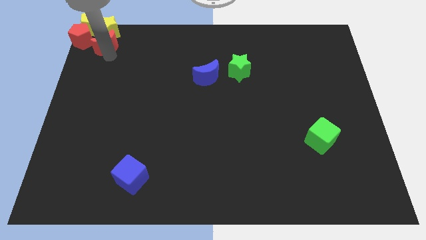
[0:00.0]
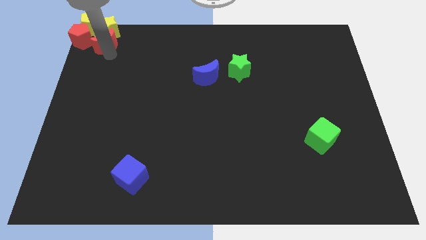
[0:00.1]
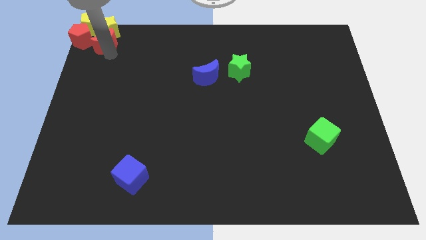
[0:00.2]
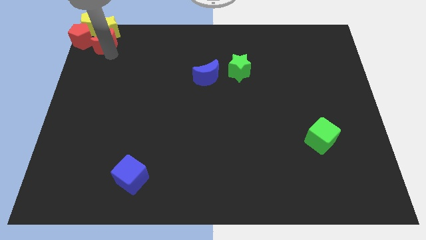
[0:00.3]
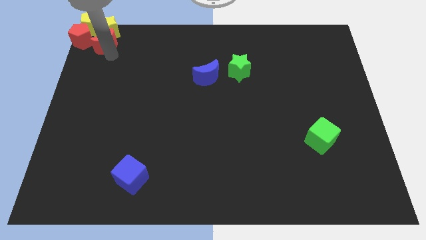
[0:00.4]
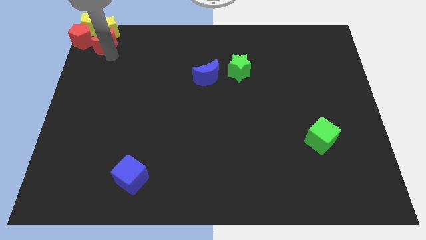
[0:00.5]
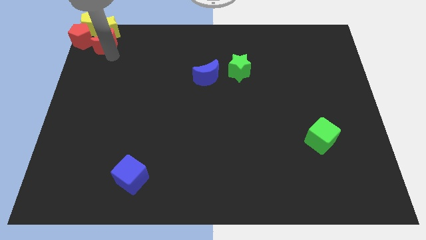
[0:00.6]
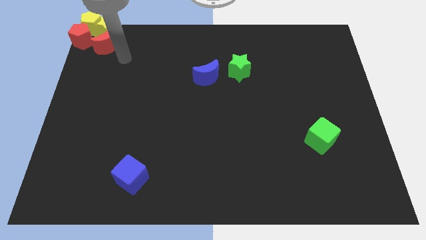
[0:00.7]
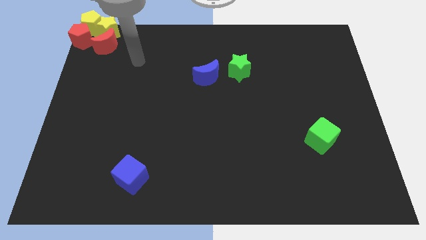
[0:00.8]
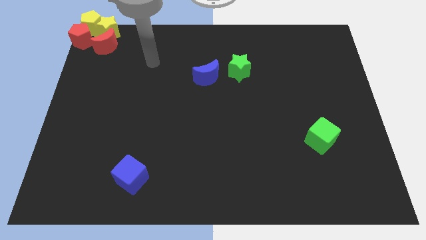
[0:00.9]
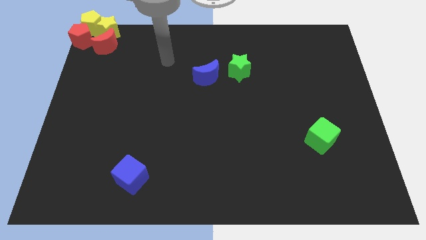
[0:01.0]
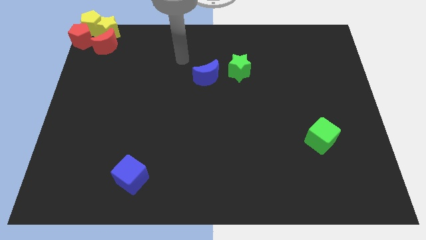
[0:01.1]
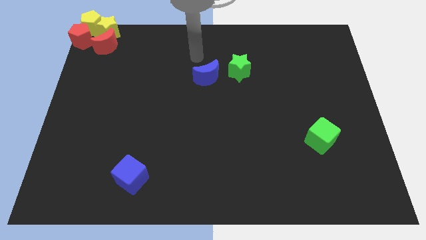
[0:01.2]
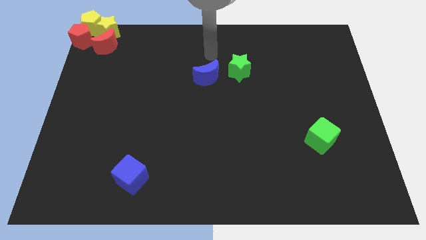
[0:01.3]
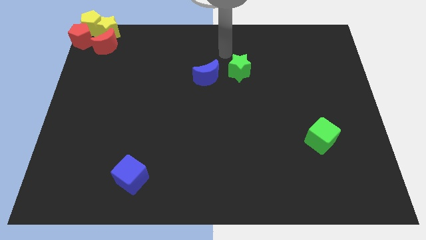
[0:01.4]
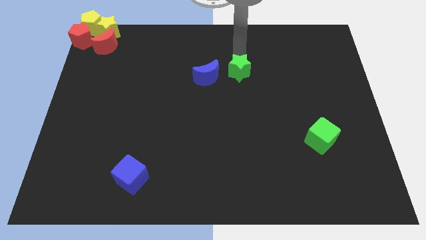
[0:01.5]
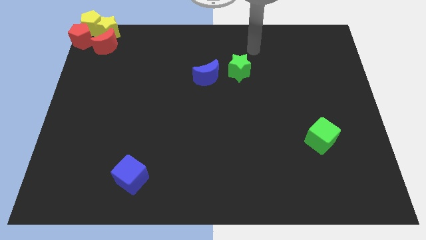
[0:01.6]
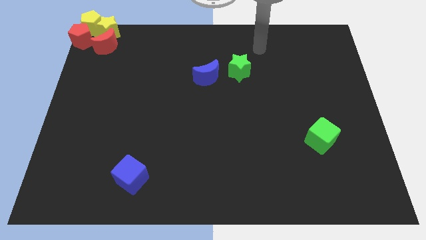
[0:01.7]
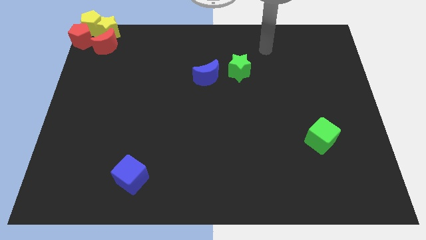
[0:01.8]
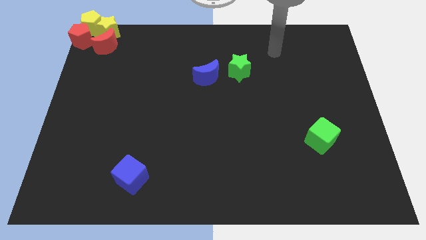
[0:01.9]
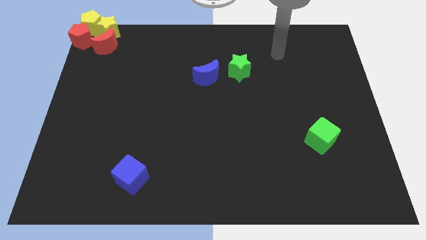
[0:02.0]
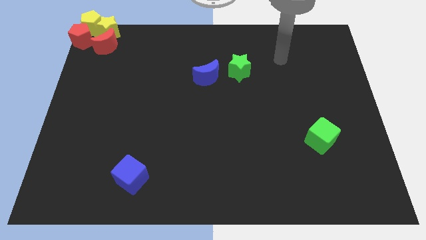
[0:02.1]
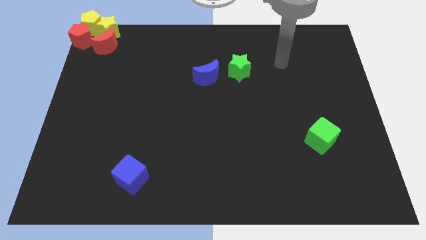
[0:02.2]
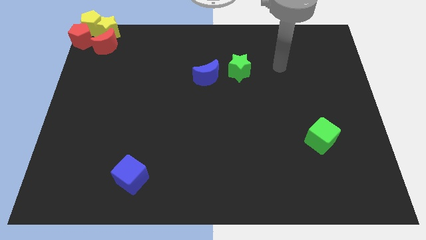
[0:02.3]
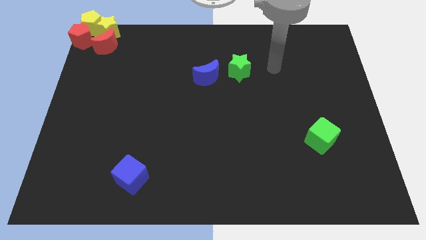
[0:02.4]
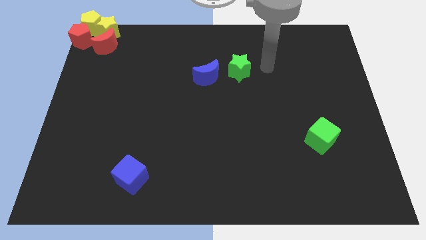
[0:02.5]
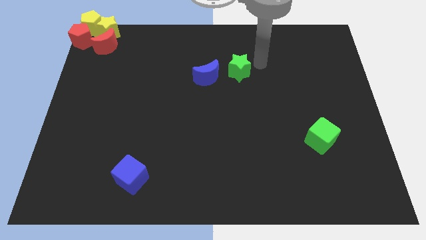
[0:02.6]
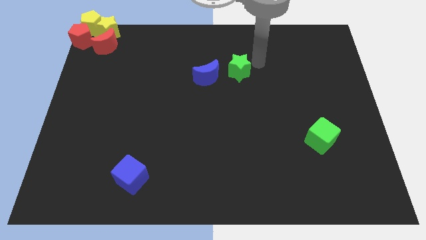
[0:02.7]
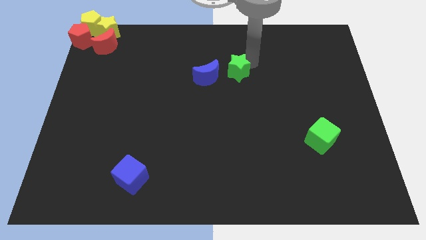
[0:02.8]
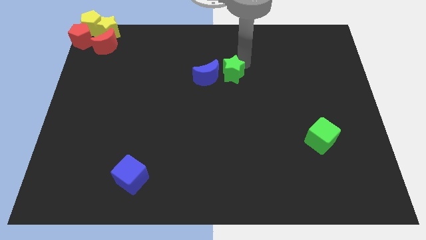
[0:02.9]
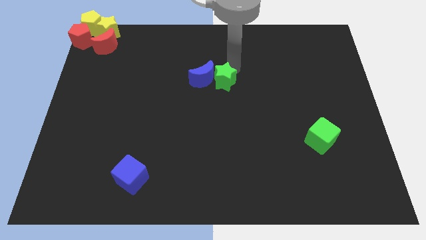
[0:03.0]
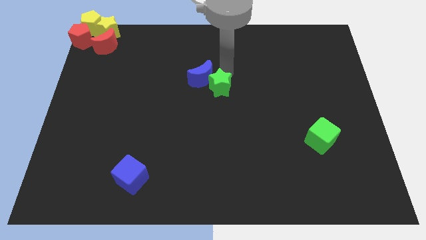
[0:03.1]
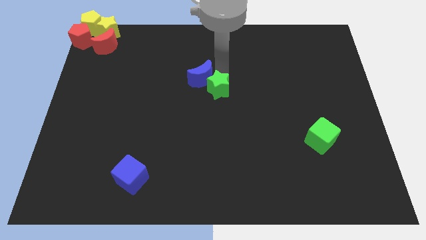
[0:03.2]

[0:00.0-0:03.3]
push green star slightly downwards

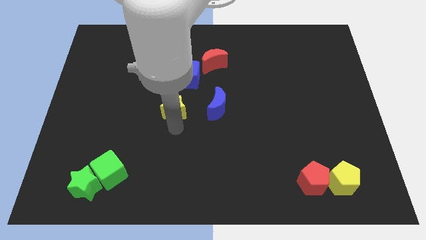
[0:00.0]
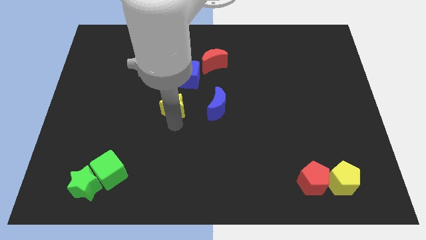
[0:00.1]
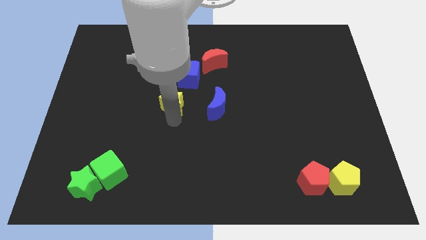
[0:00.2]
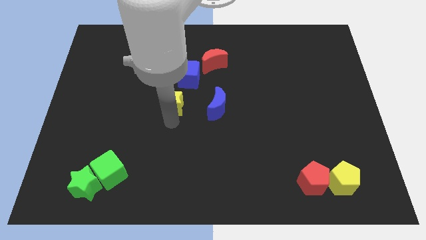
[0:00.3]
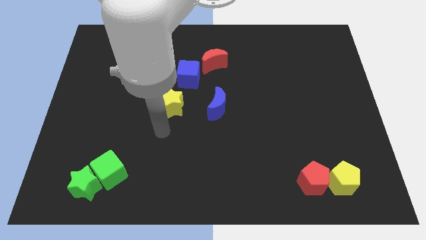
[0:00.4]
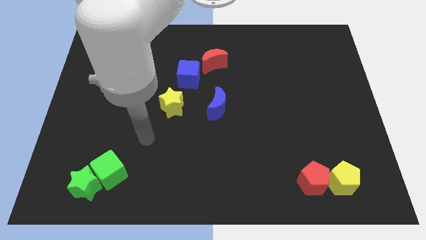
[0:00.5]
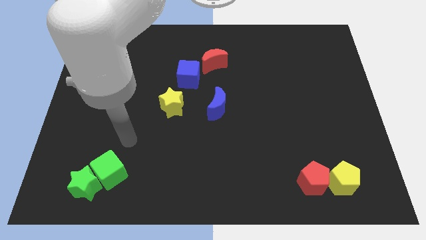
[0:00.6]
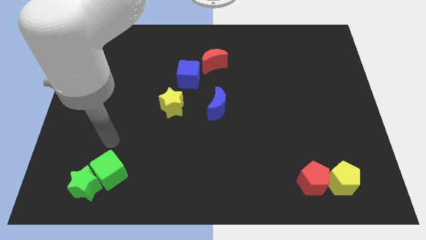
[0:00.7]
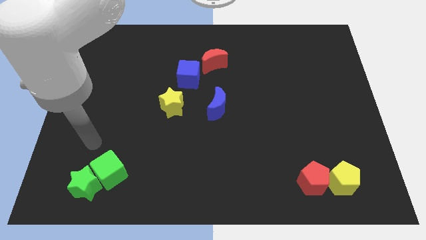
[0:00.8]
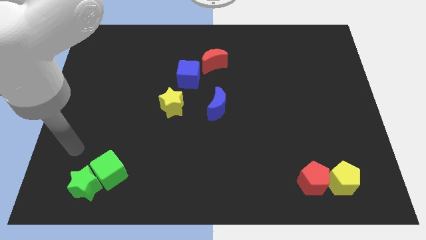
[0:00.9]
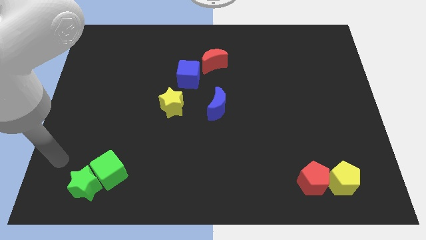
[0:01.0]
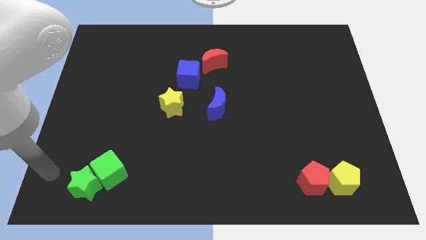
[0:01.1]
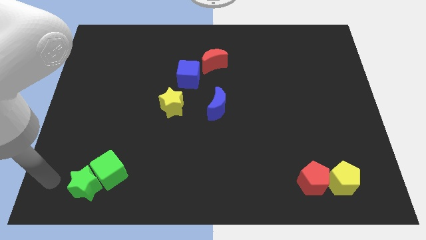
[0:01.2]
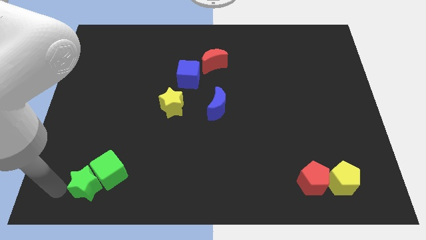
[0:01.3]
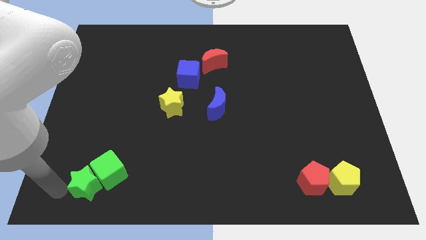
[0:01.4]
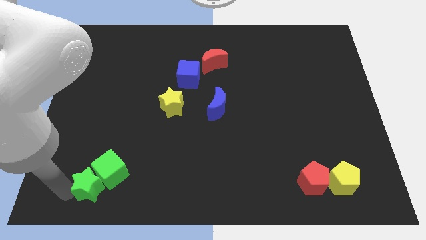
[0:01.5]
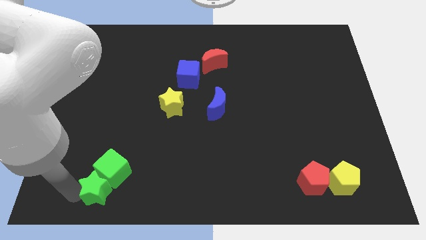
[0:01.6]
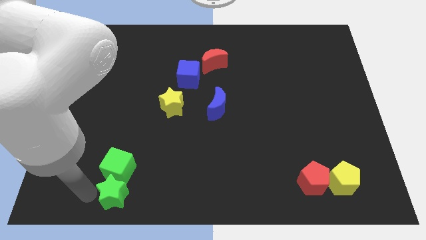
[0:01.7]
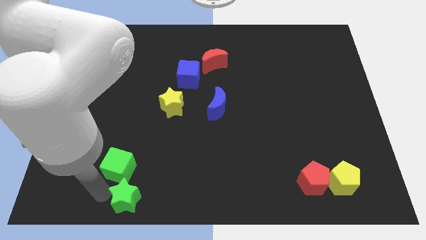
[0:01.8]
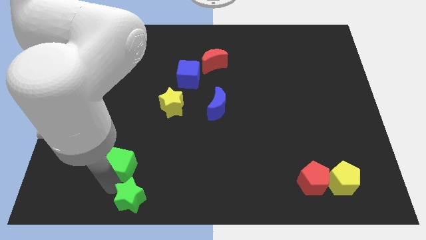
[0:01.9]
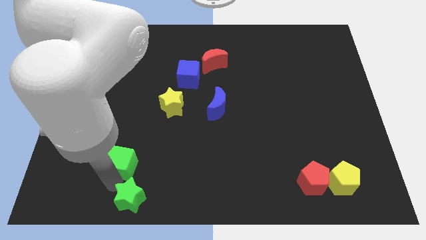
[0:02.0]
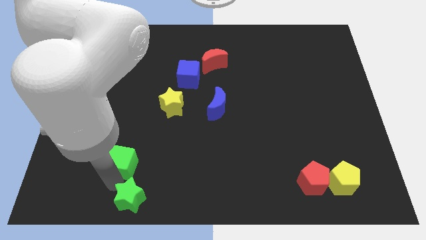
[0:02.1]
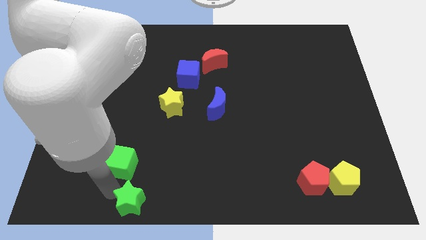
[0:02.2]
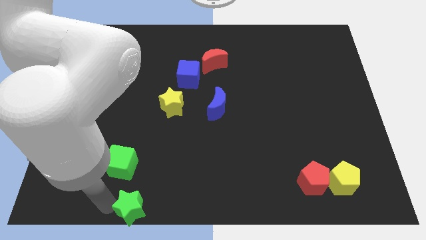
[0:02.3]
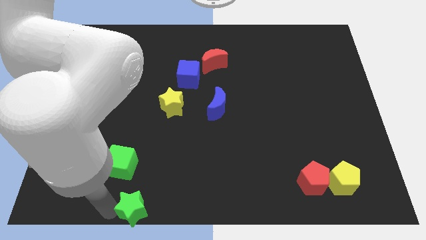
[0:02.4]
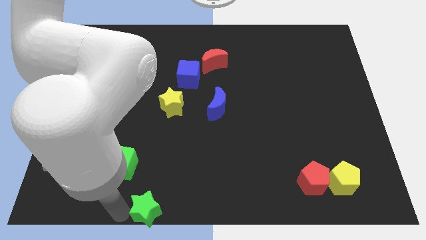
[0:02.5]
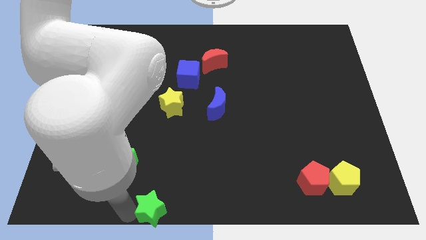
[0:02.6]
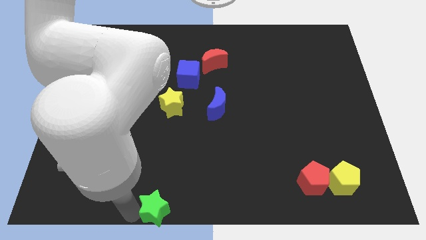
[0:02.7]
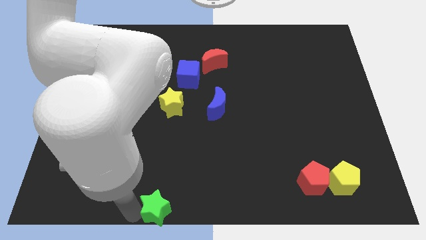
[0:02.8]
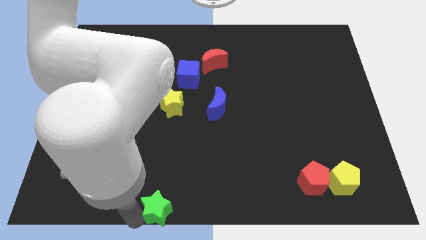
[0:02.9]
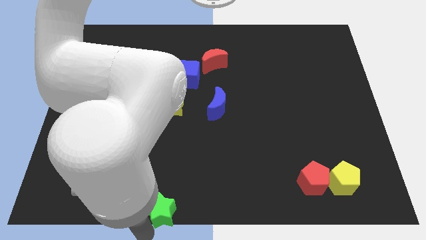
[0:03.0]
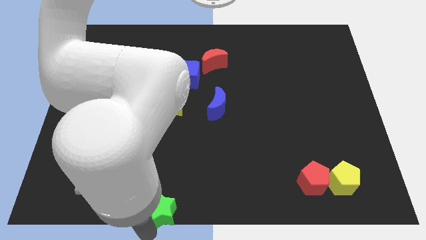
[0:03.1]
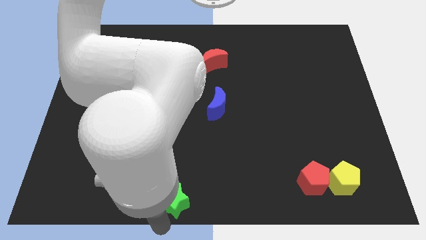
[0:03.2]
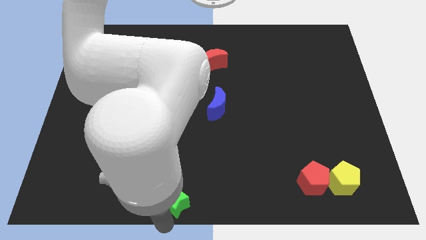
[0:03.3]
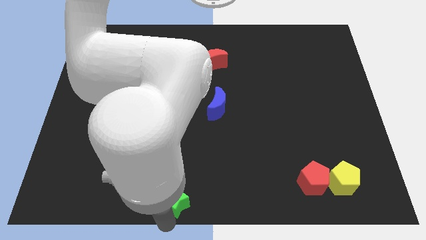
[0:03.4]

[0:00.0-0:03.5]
move the green star to the bottom center side of the board

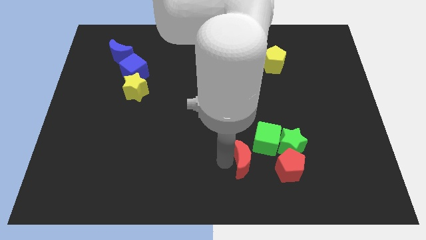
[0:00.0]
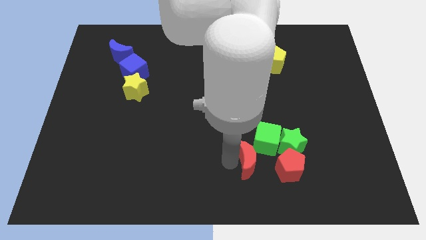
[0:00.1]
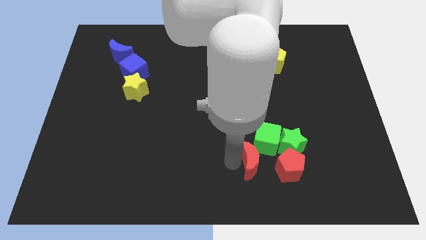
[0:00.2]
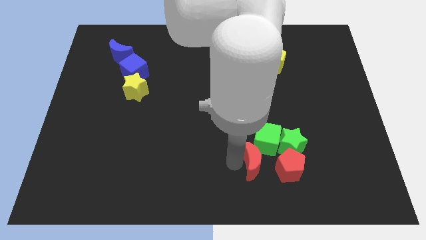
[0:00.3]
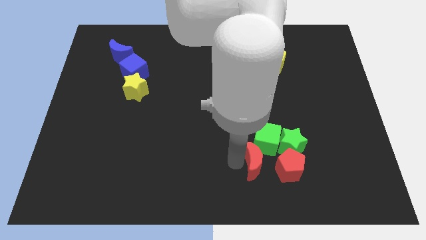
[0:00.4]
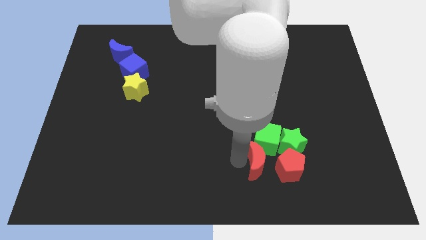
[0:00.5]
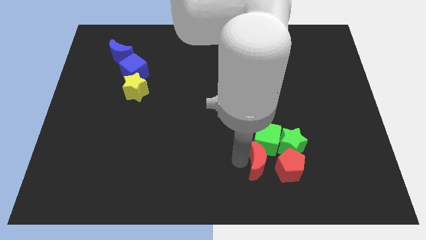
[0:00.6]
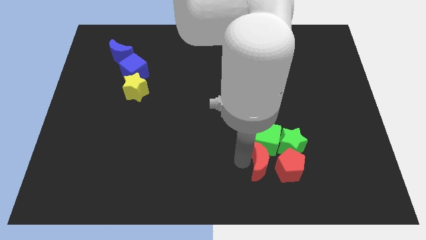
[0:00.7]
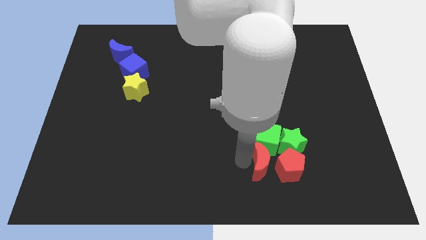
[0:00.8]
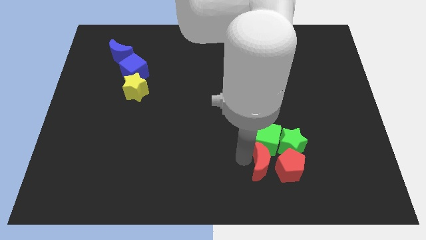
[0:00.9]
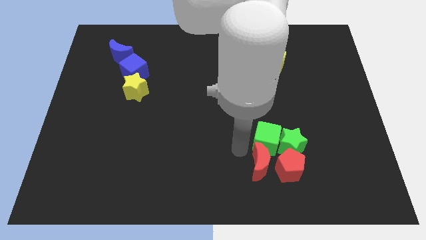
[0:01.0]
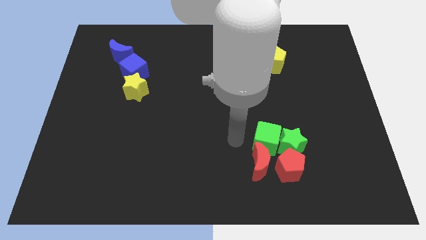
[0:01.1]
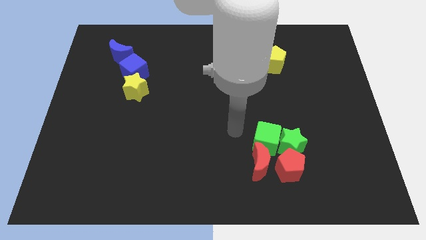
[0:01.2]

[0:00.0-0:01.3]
move red moon near the red pentagon

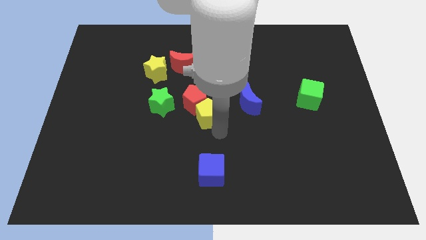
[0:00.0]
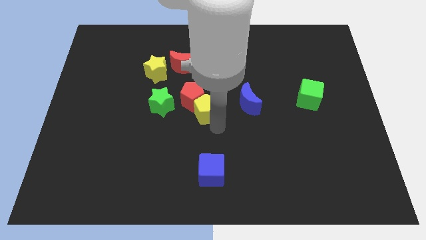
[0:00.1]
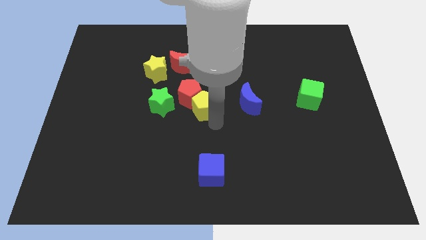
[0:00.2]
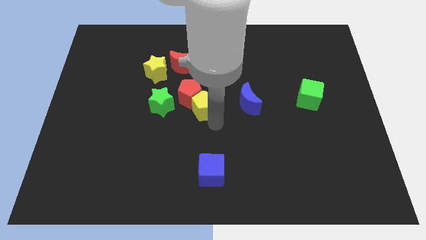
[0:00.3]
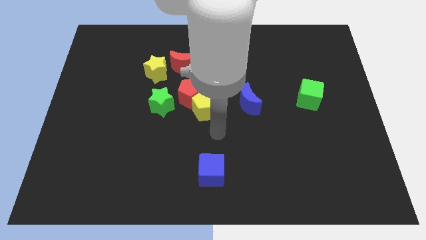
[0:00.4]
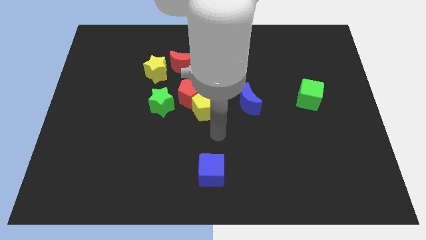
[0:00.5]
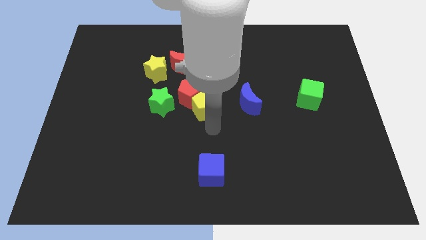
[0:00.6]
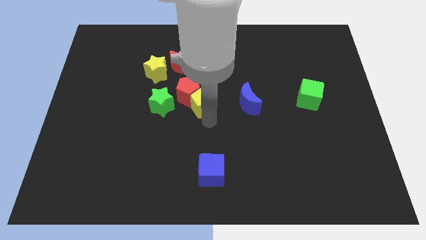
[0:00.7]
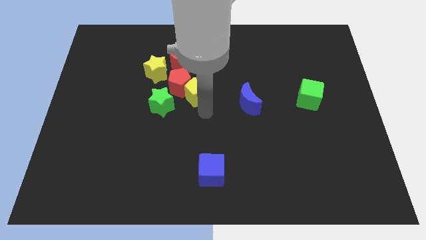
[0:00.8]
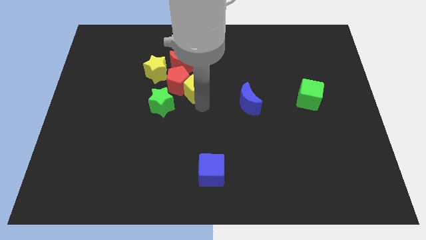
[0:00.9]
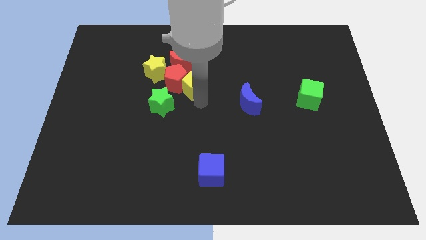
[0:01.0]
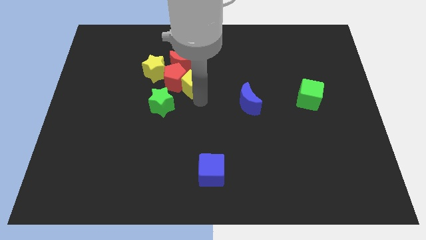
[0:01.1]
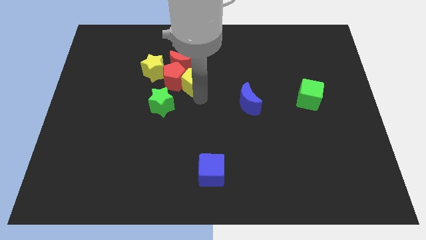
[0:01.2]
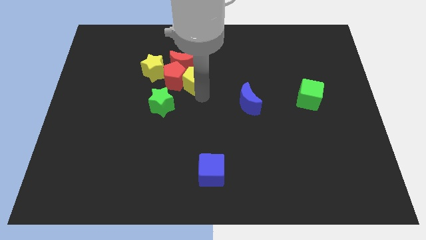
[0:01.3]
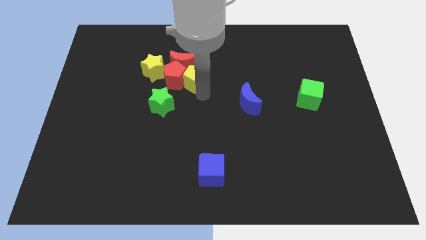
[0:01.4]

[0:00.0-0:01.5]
push red pentagon and yellow pentagon in to yellow star
